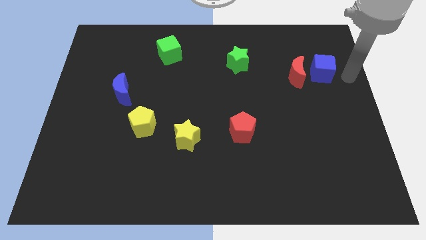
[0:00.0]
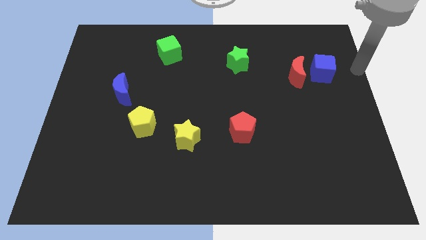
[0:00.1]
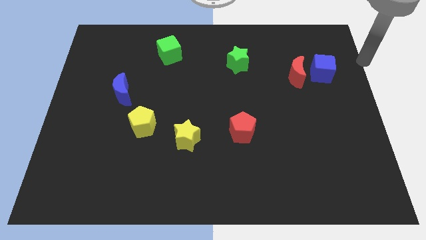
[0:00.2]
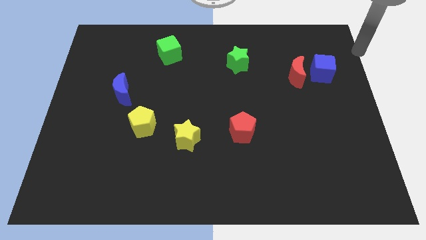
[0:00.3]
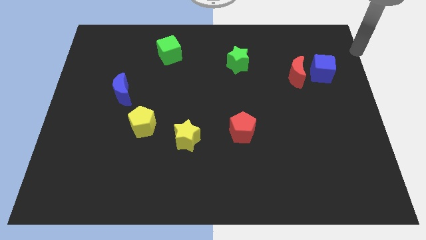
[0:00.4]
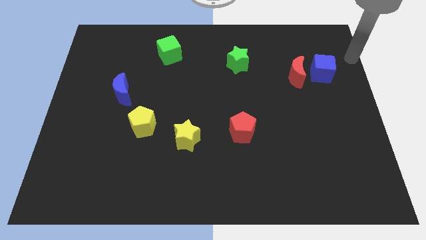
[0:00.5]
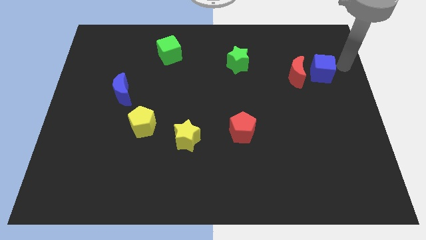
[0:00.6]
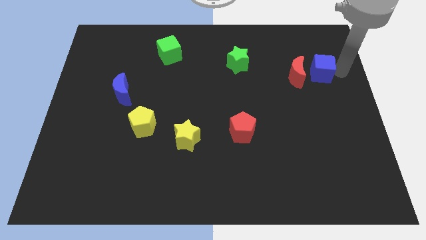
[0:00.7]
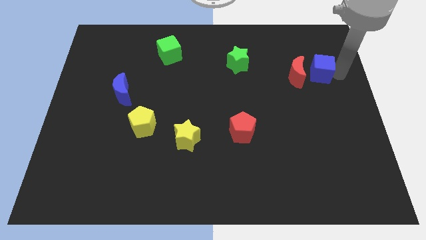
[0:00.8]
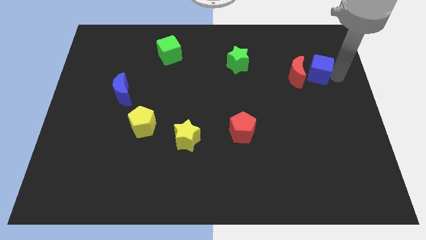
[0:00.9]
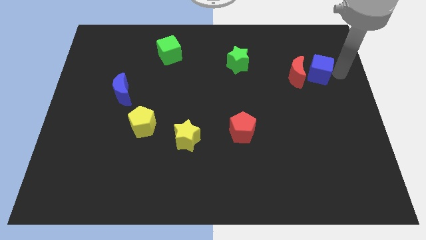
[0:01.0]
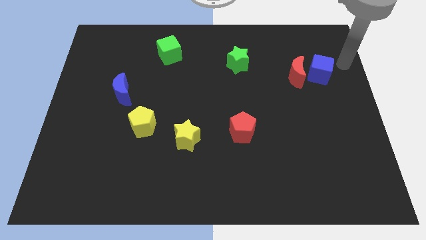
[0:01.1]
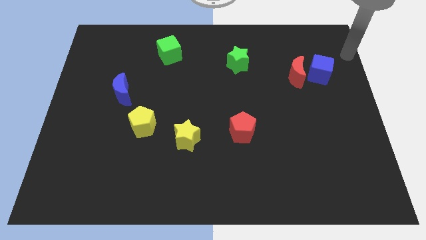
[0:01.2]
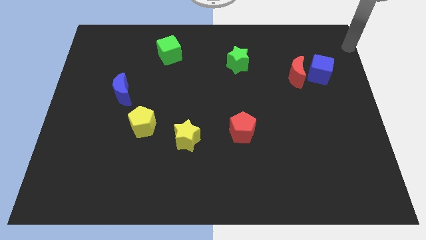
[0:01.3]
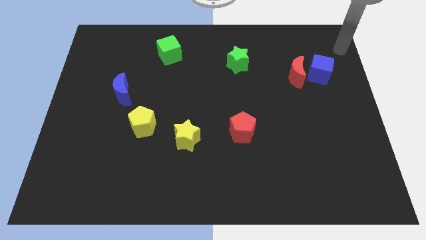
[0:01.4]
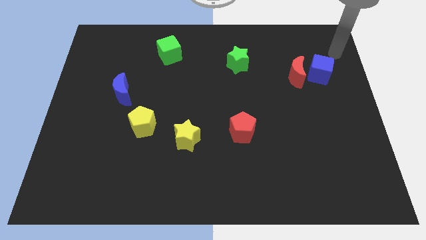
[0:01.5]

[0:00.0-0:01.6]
slightly push the blue cube towards the red crescent

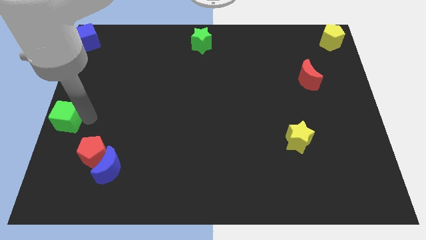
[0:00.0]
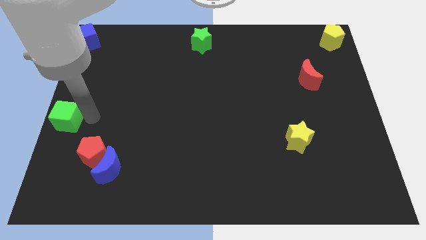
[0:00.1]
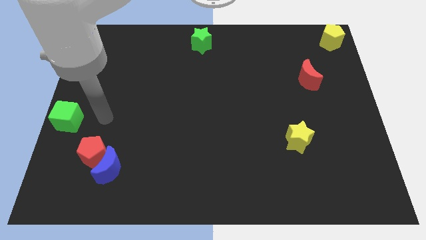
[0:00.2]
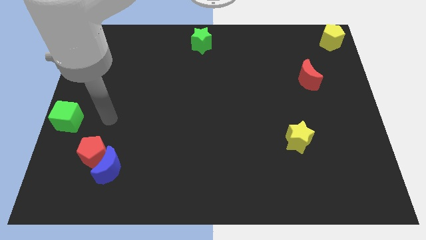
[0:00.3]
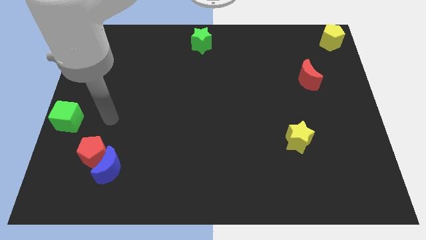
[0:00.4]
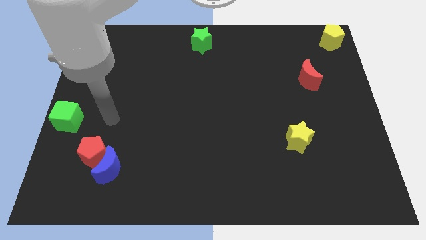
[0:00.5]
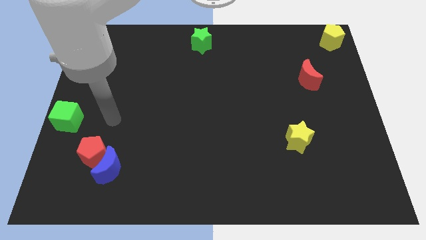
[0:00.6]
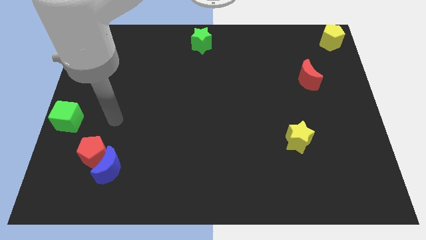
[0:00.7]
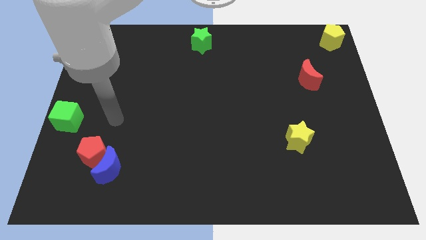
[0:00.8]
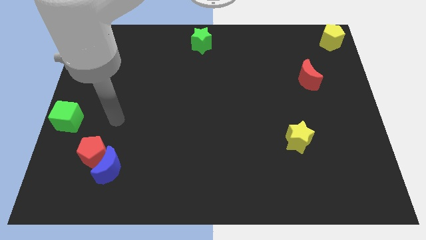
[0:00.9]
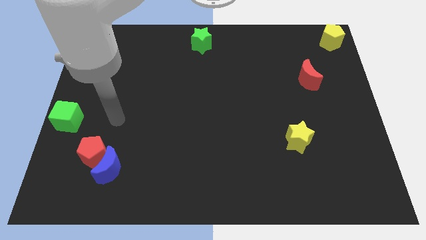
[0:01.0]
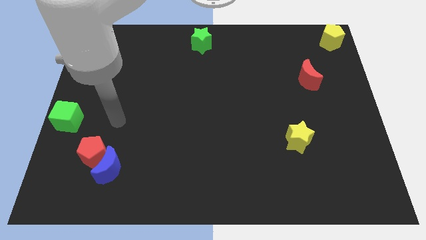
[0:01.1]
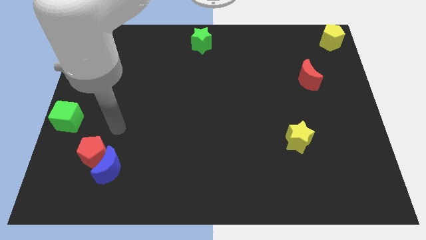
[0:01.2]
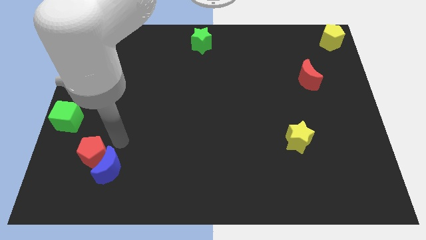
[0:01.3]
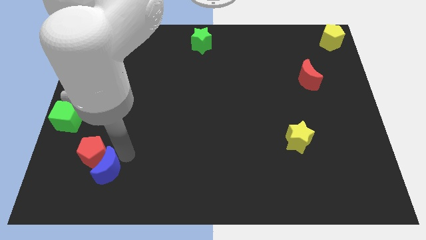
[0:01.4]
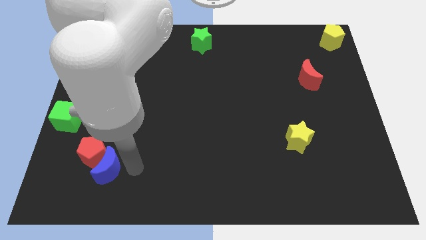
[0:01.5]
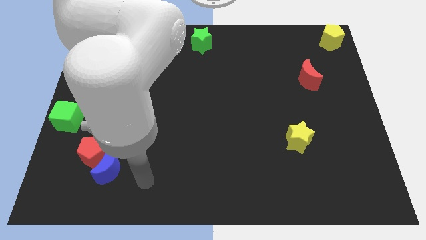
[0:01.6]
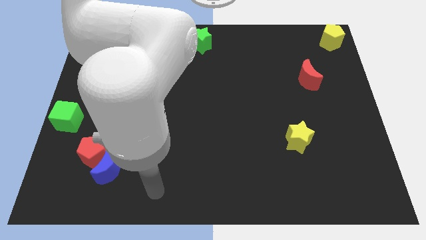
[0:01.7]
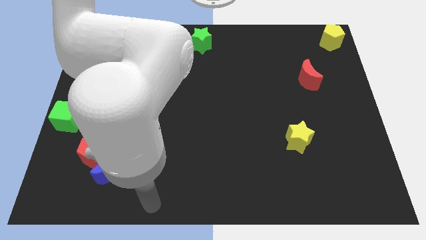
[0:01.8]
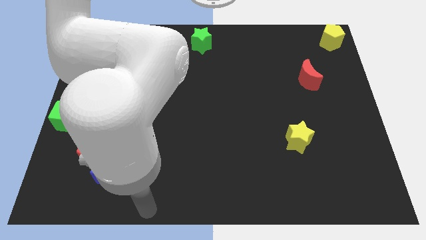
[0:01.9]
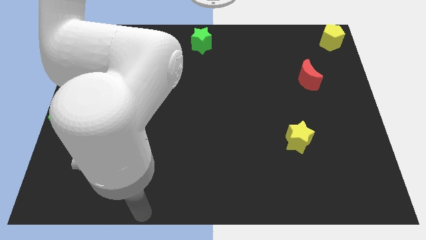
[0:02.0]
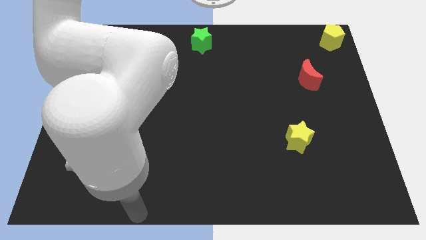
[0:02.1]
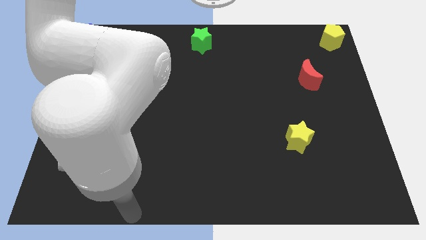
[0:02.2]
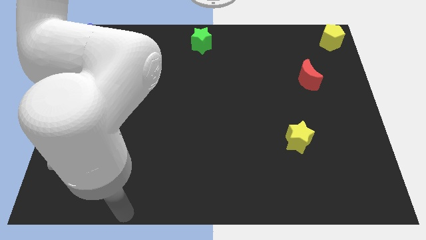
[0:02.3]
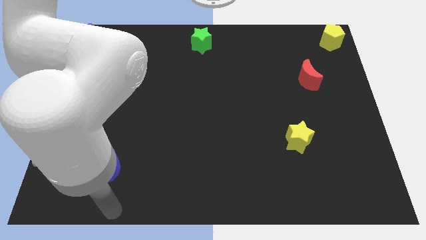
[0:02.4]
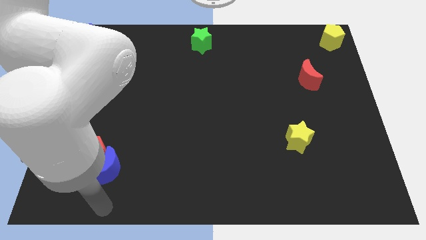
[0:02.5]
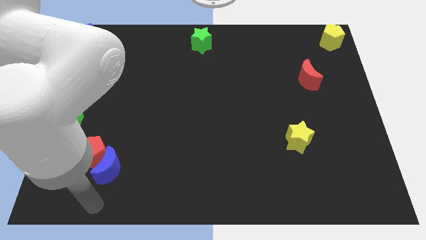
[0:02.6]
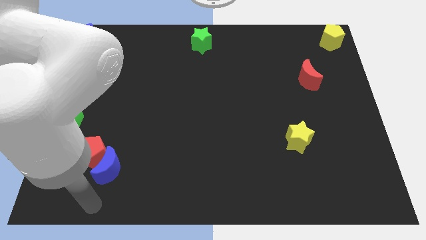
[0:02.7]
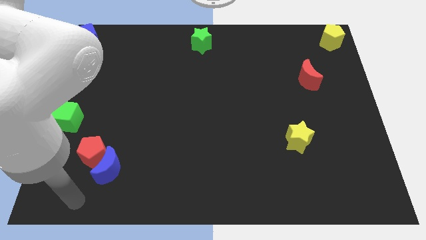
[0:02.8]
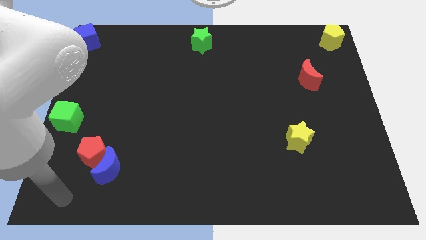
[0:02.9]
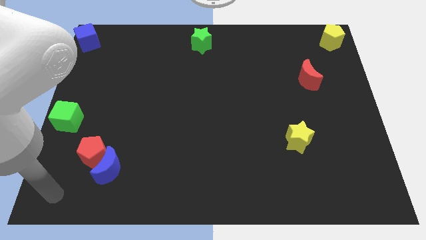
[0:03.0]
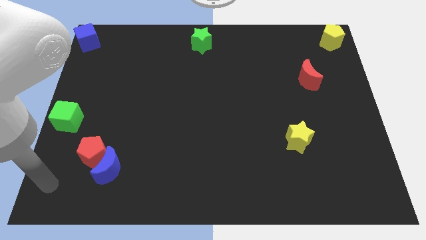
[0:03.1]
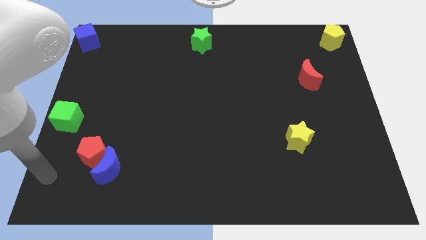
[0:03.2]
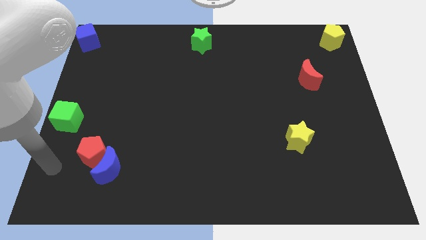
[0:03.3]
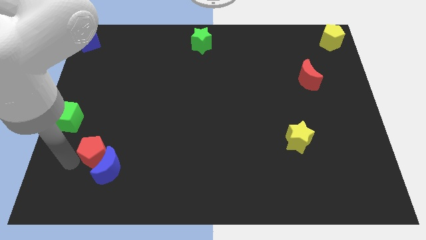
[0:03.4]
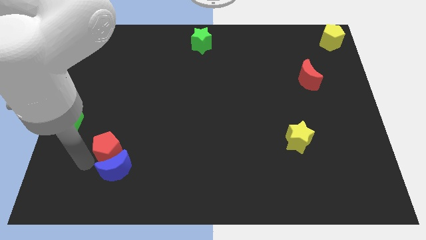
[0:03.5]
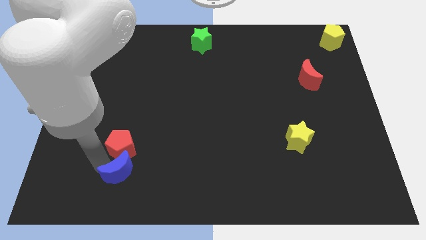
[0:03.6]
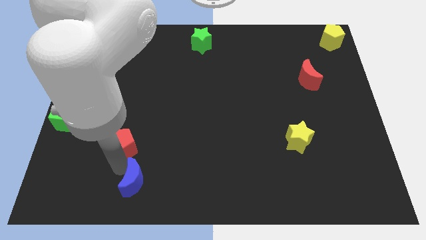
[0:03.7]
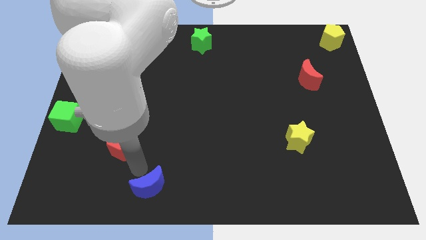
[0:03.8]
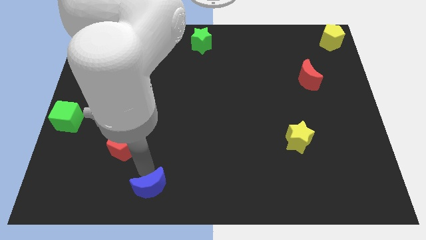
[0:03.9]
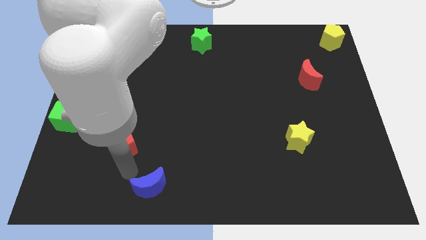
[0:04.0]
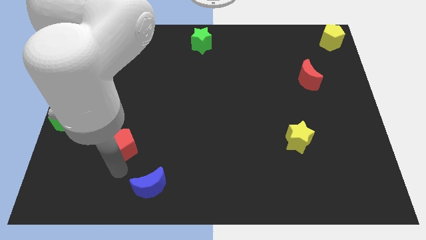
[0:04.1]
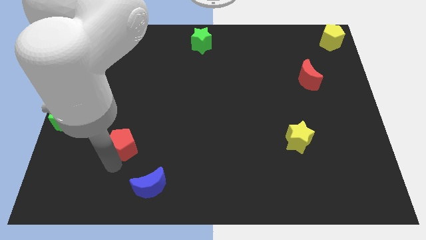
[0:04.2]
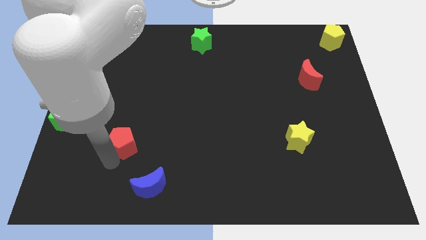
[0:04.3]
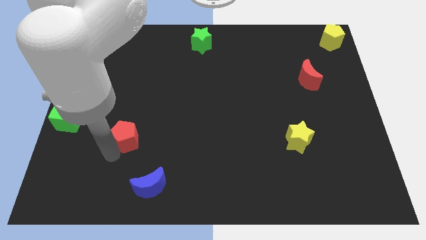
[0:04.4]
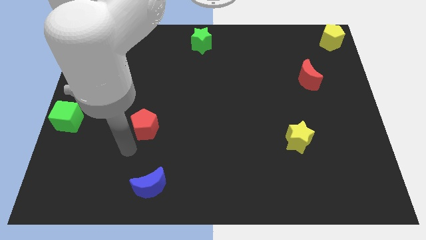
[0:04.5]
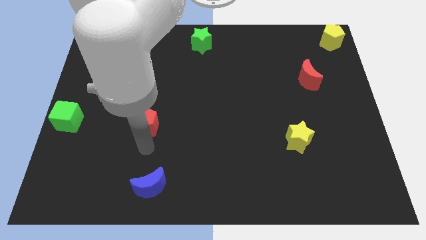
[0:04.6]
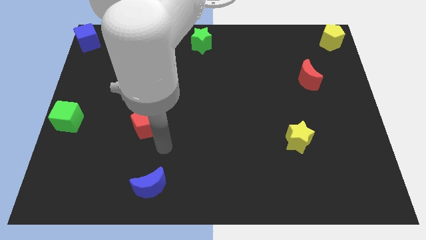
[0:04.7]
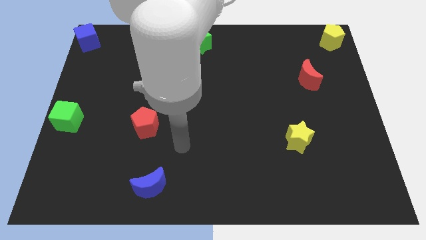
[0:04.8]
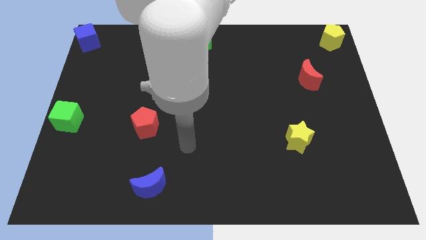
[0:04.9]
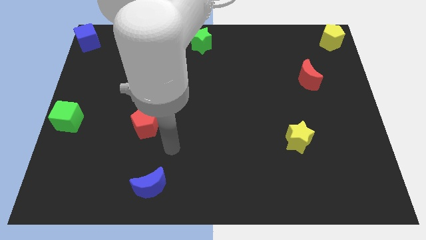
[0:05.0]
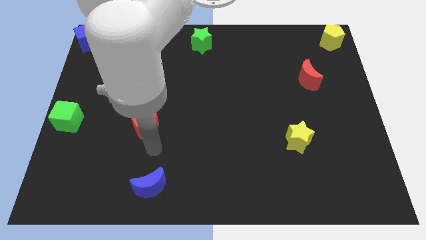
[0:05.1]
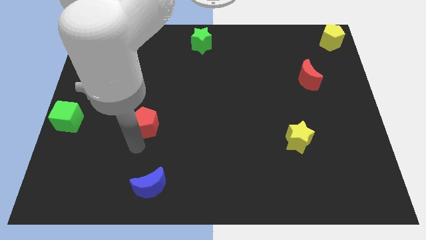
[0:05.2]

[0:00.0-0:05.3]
separate the red pentagon and blue moon

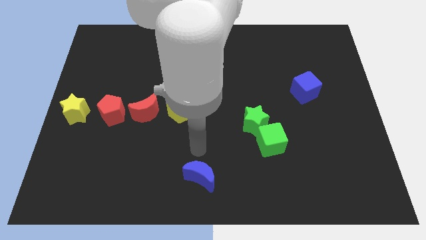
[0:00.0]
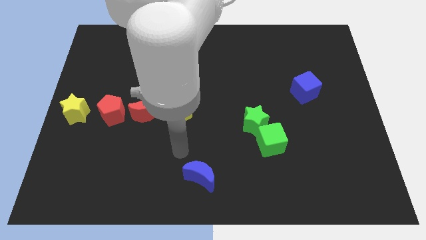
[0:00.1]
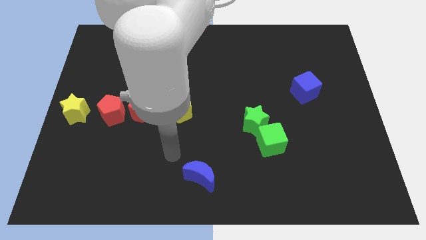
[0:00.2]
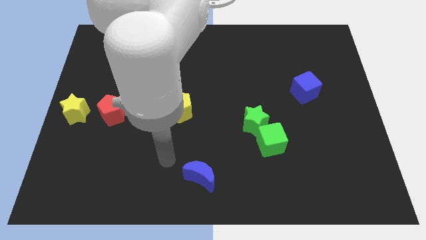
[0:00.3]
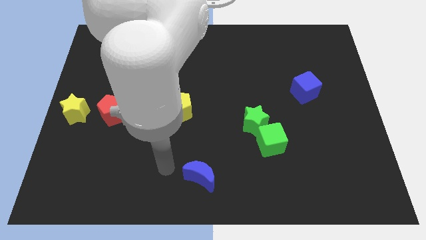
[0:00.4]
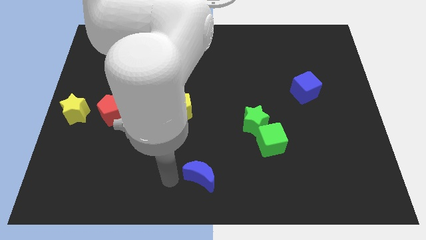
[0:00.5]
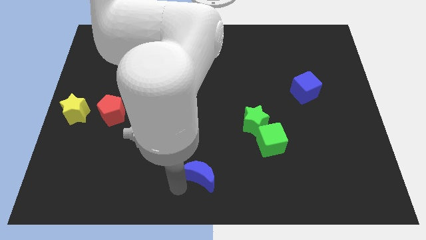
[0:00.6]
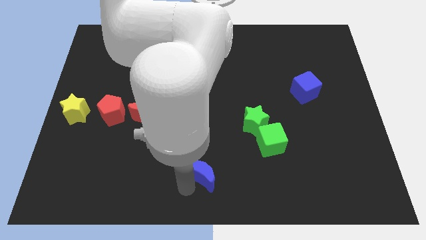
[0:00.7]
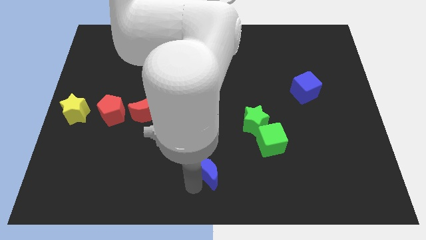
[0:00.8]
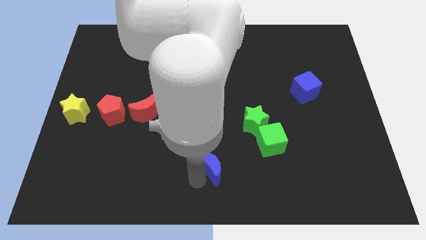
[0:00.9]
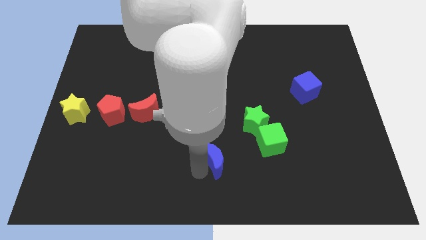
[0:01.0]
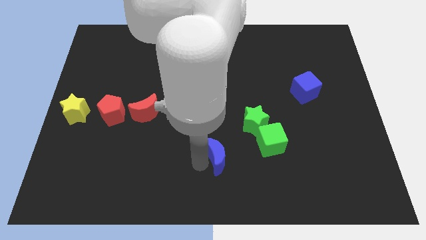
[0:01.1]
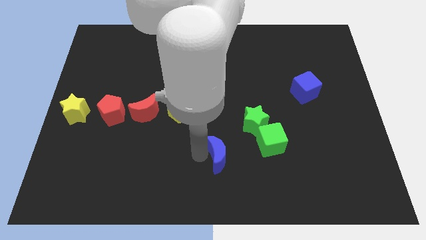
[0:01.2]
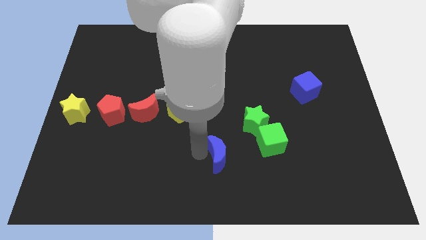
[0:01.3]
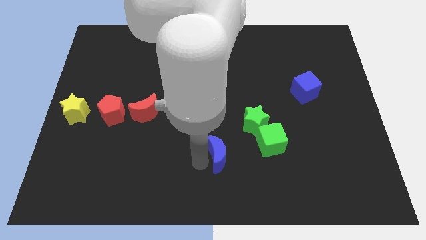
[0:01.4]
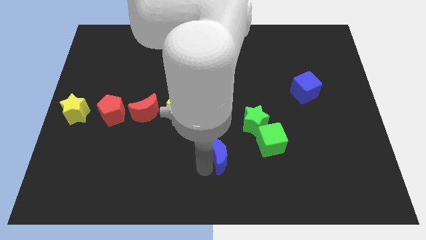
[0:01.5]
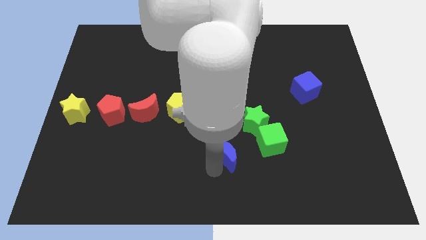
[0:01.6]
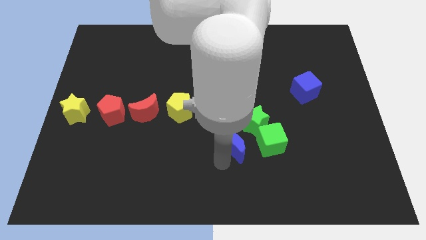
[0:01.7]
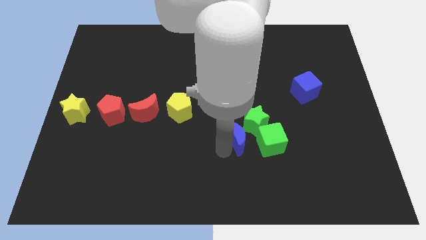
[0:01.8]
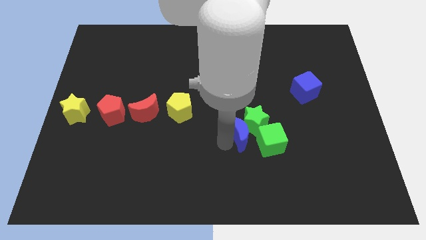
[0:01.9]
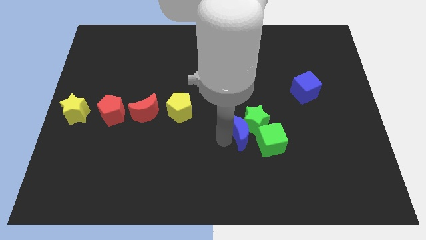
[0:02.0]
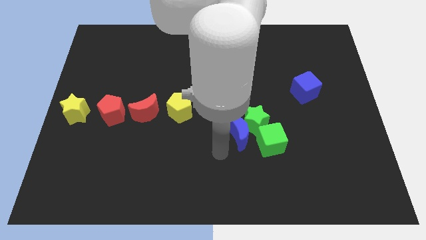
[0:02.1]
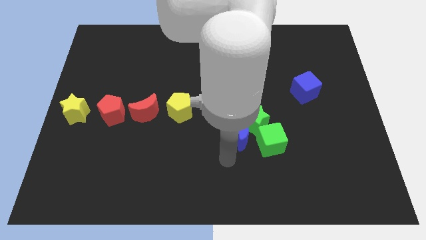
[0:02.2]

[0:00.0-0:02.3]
push the blue crescent to the left of the green star
